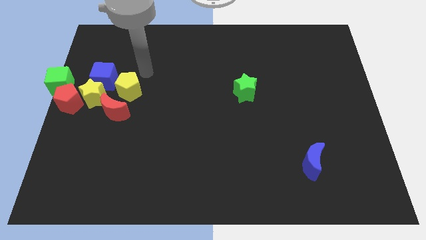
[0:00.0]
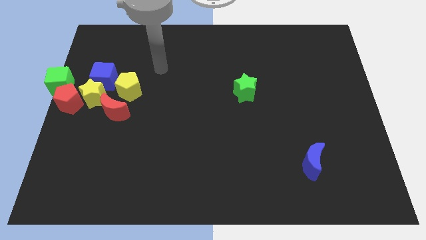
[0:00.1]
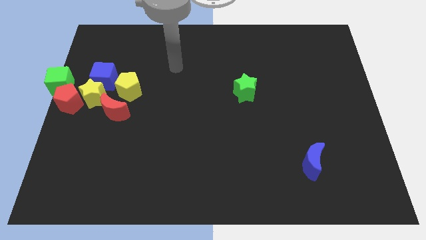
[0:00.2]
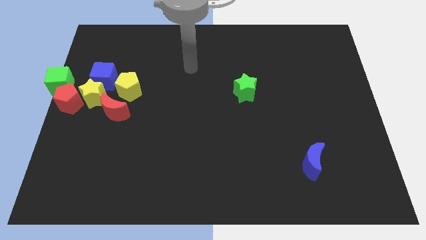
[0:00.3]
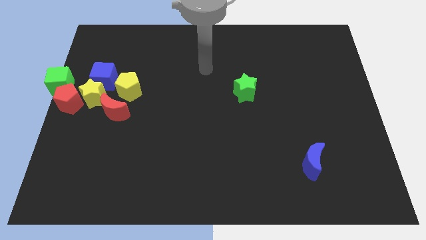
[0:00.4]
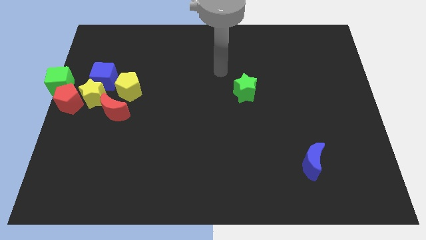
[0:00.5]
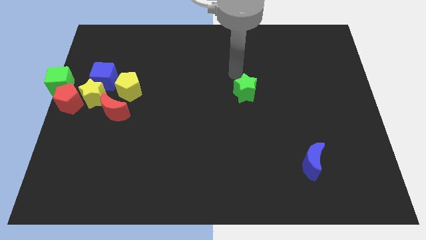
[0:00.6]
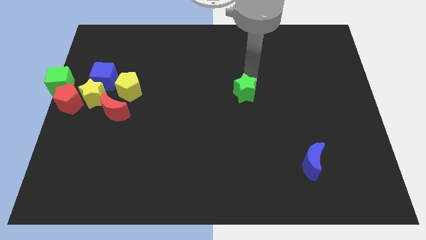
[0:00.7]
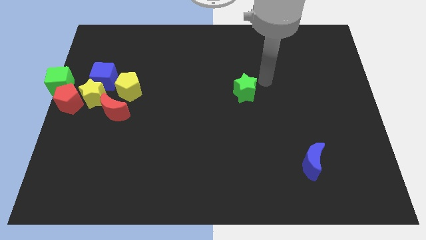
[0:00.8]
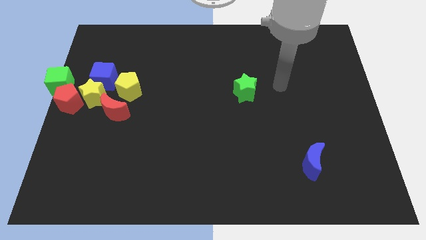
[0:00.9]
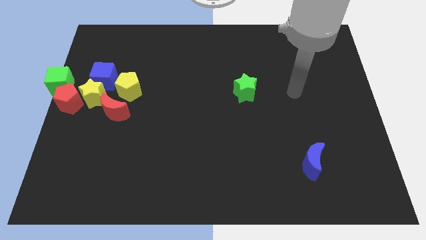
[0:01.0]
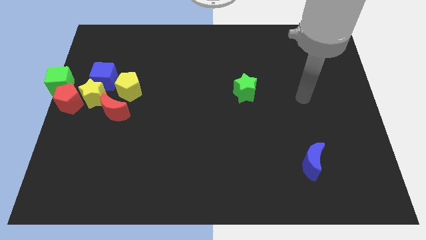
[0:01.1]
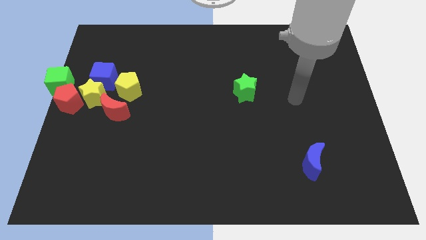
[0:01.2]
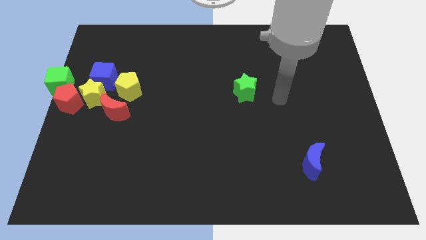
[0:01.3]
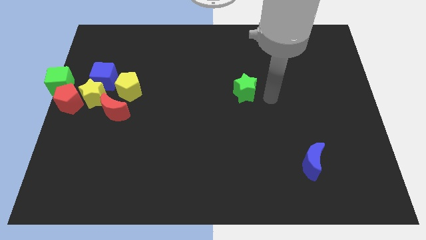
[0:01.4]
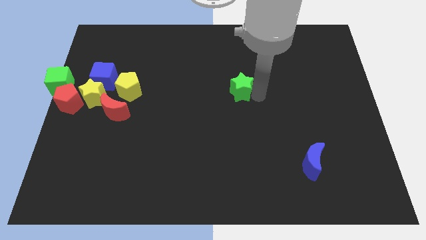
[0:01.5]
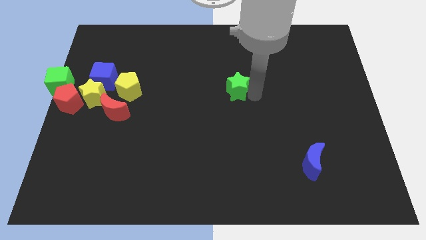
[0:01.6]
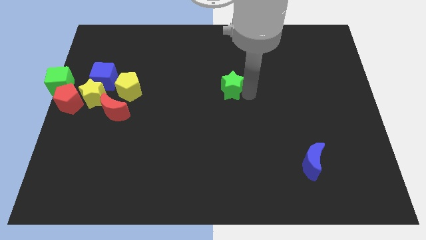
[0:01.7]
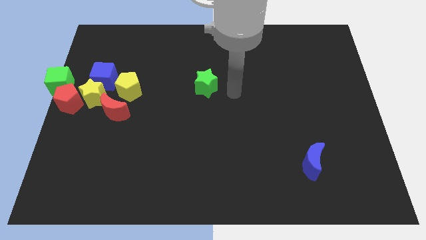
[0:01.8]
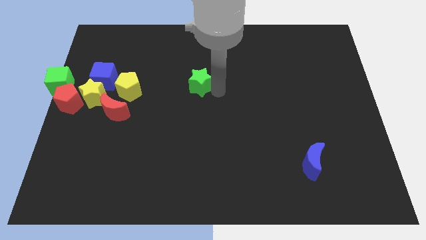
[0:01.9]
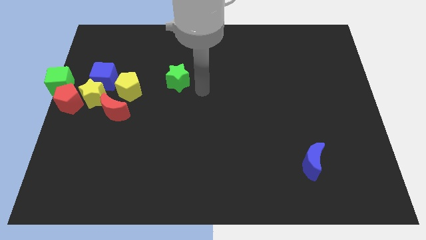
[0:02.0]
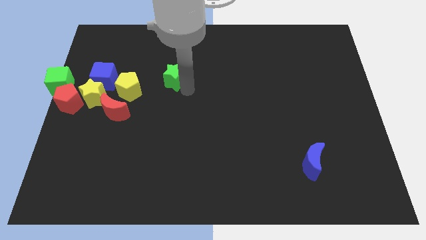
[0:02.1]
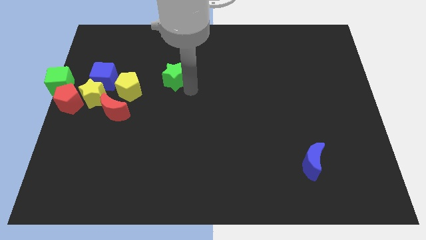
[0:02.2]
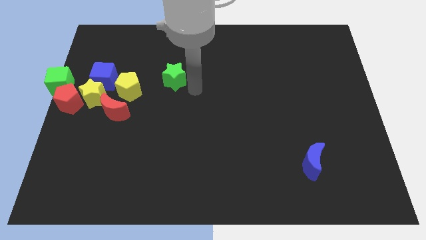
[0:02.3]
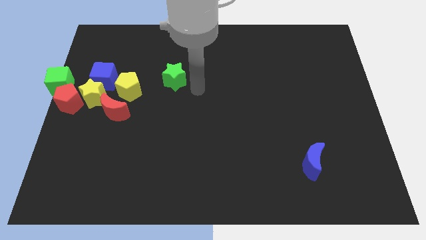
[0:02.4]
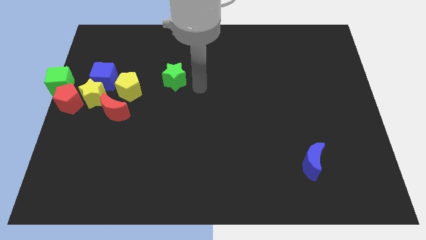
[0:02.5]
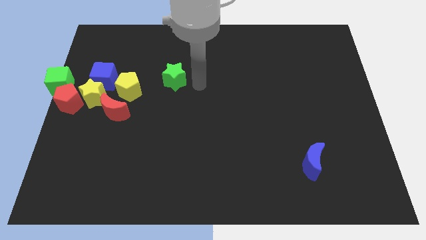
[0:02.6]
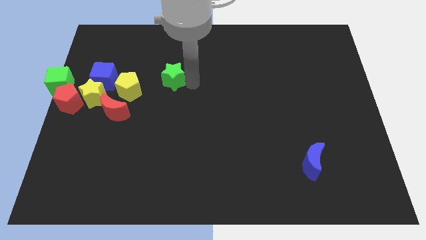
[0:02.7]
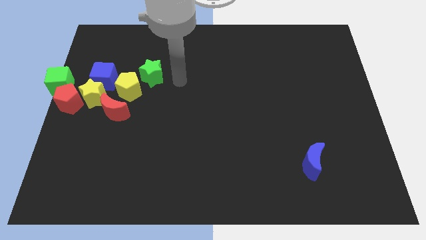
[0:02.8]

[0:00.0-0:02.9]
push the green star towards left

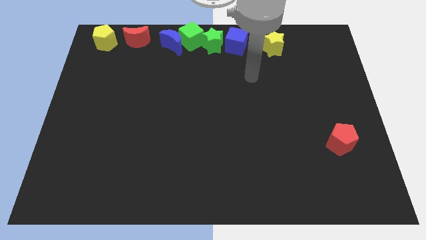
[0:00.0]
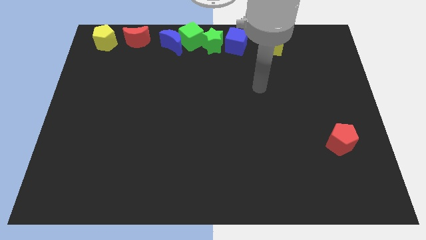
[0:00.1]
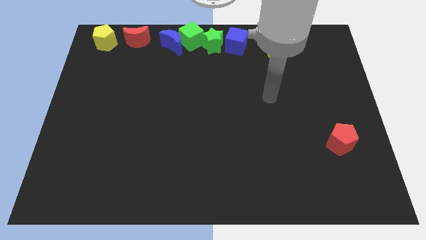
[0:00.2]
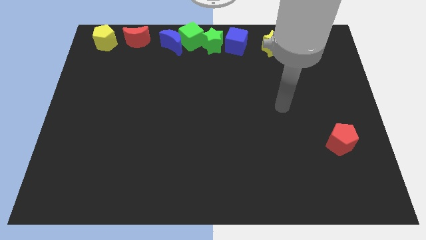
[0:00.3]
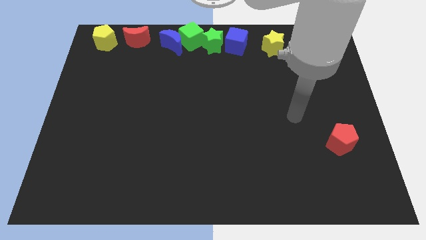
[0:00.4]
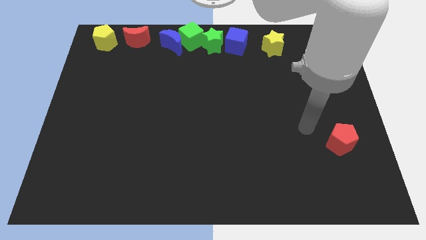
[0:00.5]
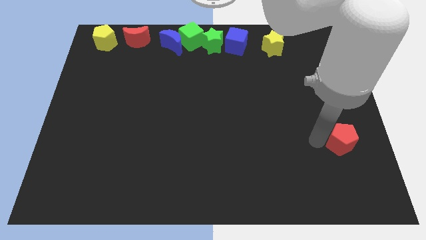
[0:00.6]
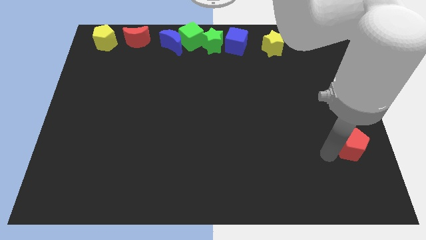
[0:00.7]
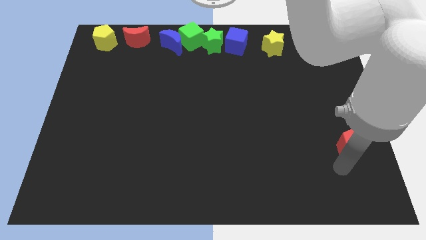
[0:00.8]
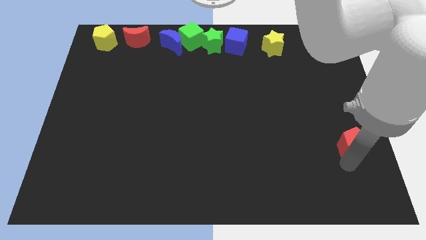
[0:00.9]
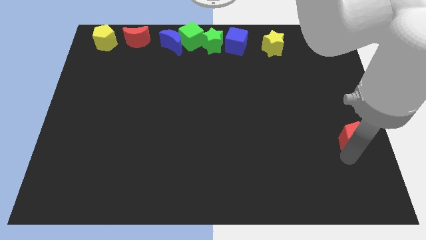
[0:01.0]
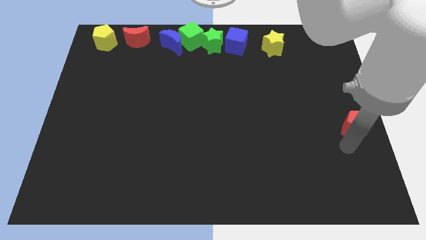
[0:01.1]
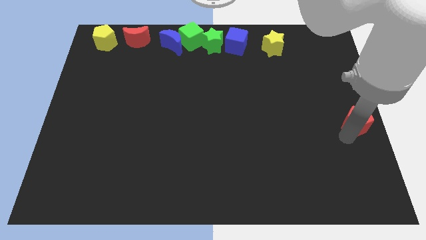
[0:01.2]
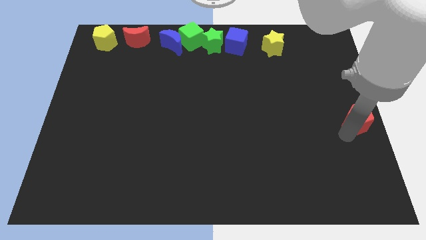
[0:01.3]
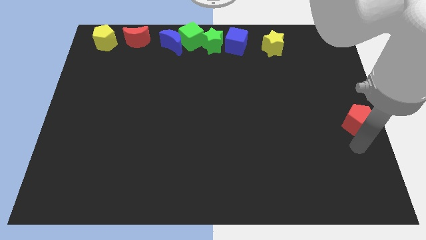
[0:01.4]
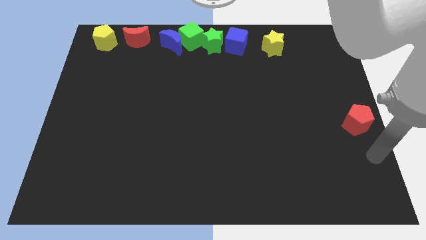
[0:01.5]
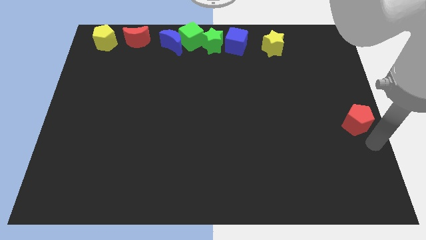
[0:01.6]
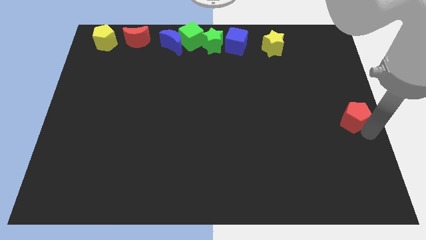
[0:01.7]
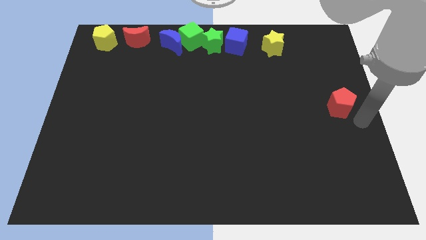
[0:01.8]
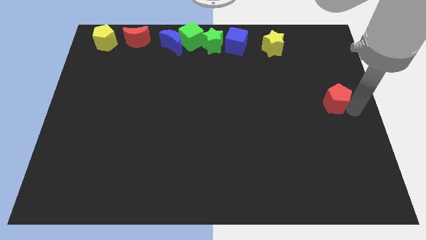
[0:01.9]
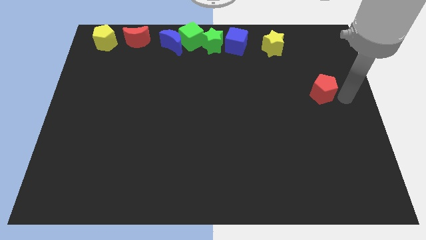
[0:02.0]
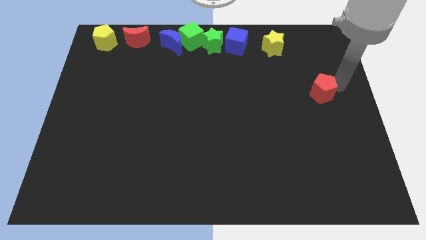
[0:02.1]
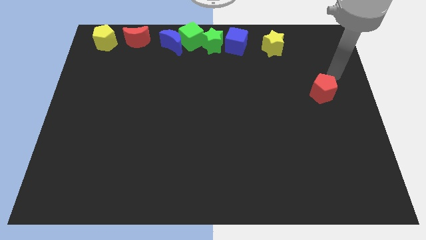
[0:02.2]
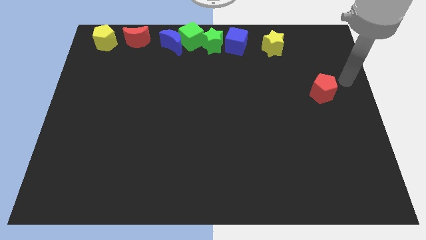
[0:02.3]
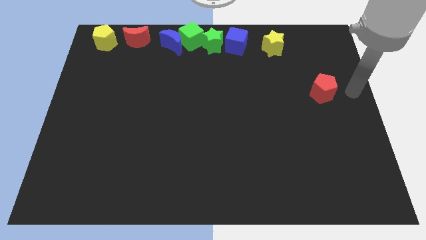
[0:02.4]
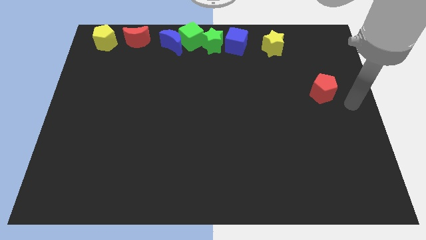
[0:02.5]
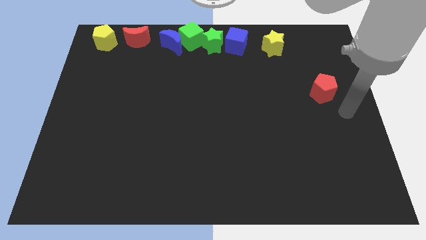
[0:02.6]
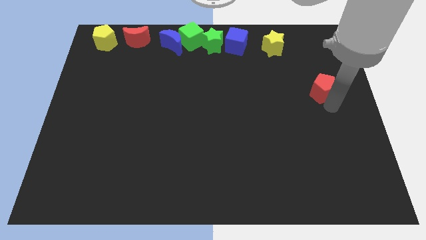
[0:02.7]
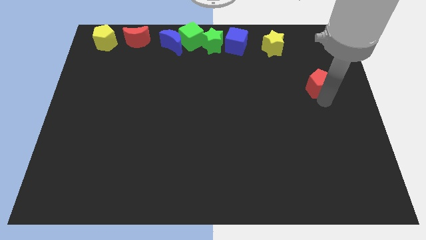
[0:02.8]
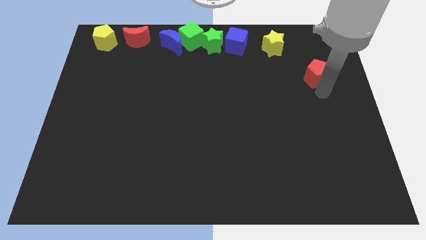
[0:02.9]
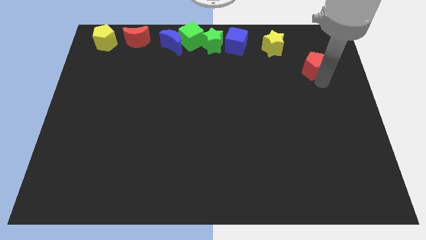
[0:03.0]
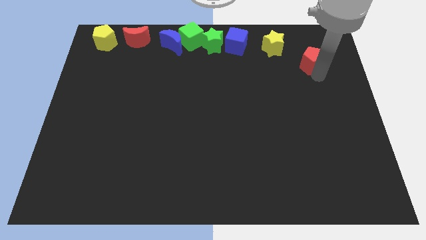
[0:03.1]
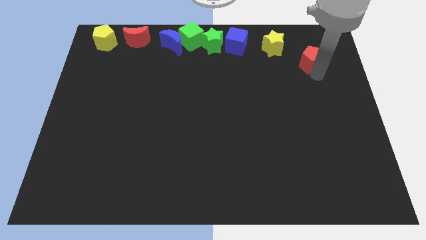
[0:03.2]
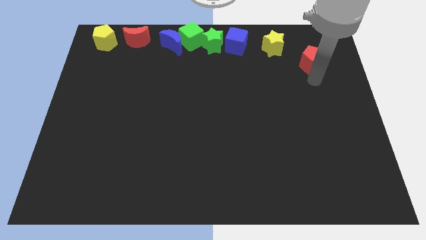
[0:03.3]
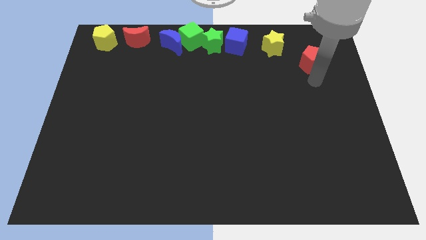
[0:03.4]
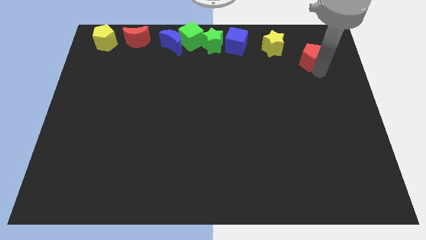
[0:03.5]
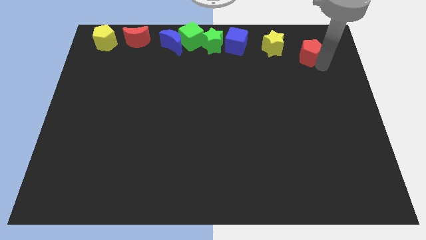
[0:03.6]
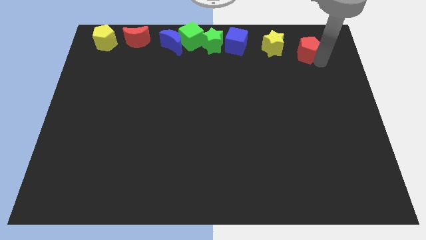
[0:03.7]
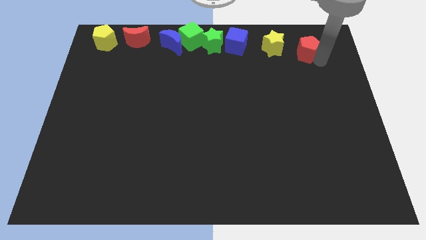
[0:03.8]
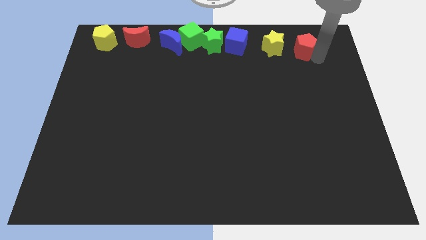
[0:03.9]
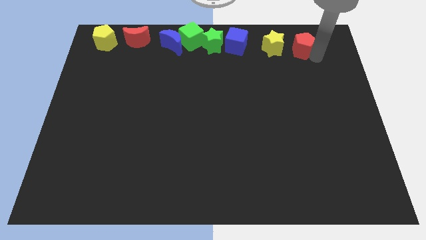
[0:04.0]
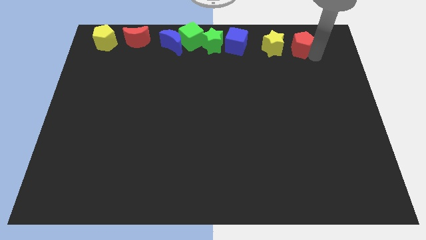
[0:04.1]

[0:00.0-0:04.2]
push the red pentagon near to the right side of the yellow star

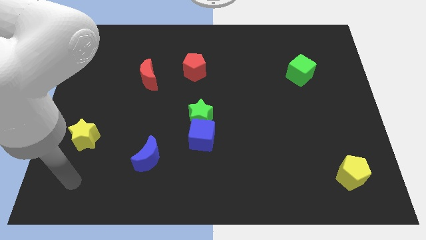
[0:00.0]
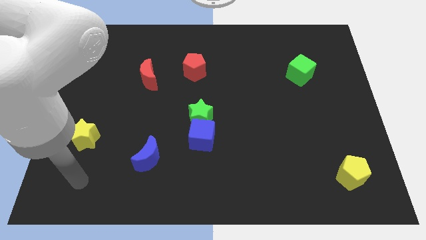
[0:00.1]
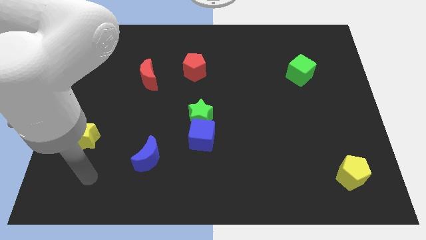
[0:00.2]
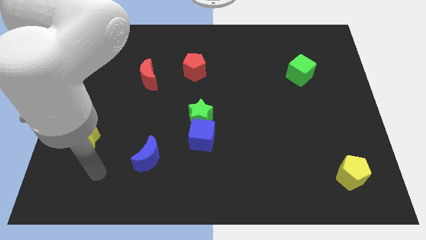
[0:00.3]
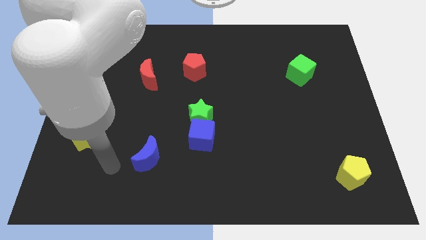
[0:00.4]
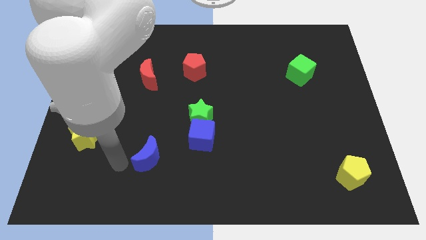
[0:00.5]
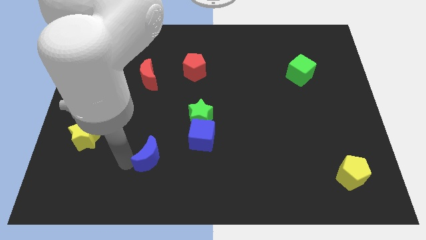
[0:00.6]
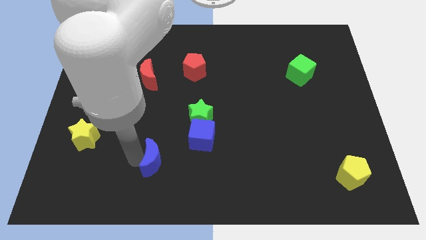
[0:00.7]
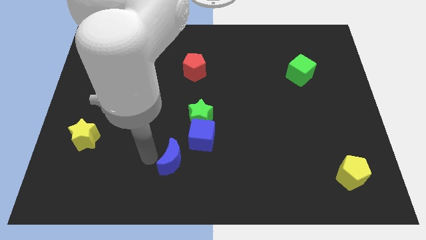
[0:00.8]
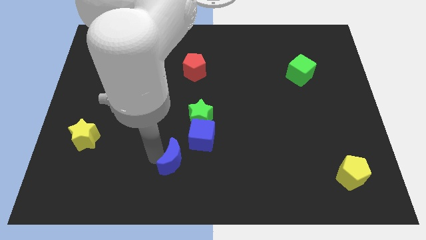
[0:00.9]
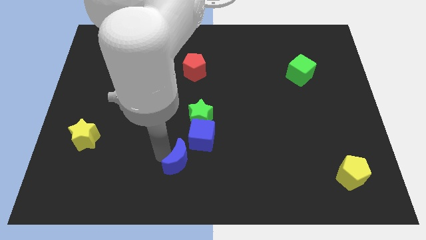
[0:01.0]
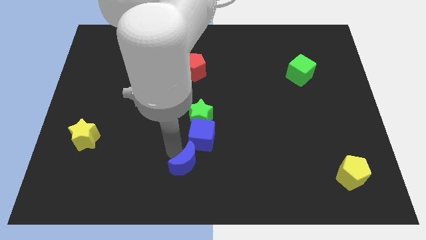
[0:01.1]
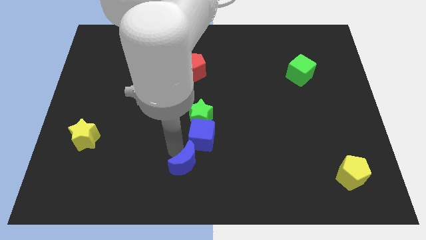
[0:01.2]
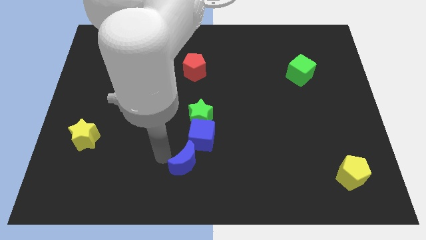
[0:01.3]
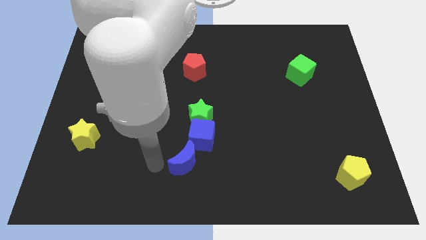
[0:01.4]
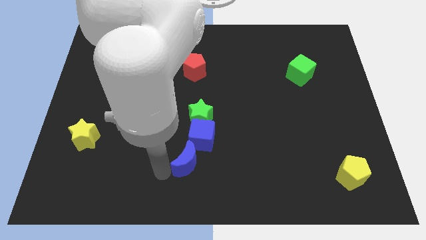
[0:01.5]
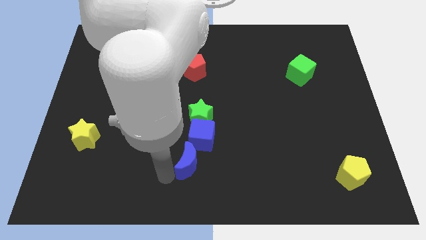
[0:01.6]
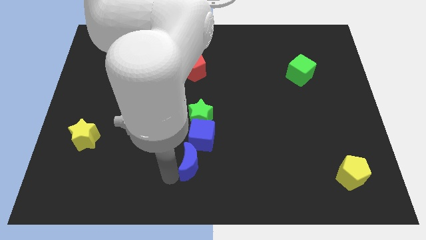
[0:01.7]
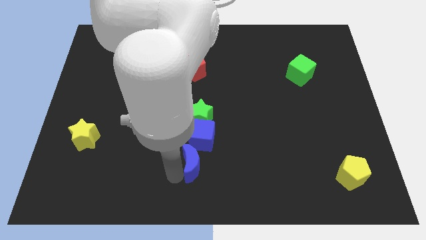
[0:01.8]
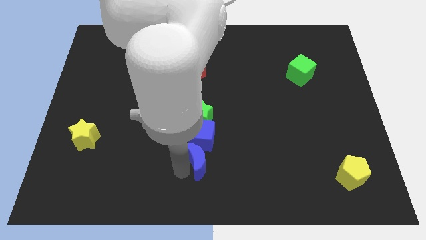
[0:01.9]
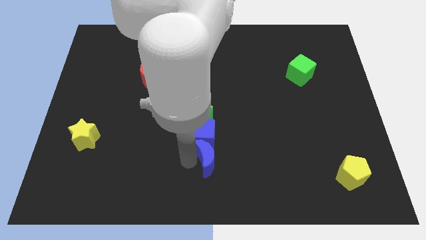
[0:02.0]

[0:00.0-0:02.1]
push blue moon below the blue cube
